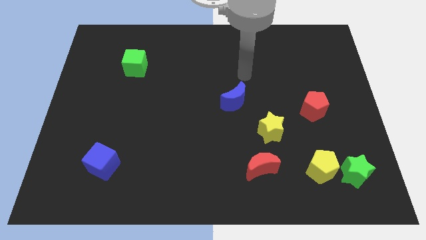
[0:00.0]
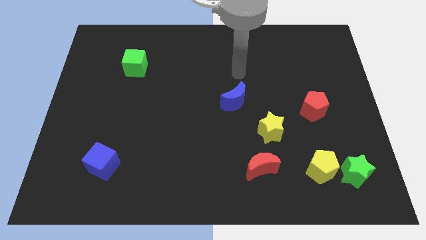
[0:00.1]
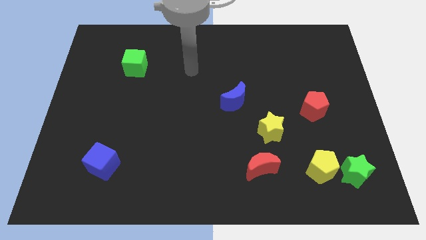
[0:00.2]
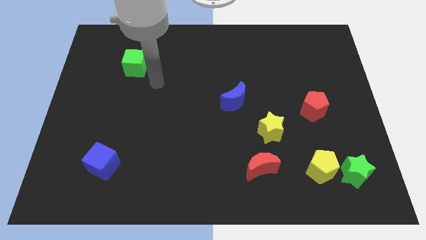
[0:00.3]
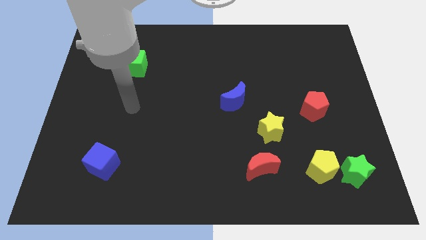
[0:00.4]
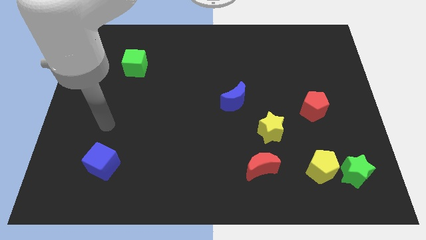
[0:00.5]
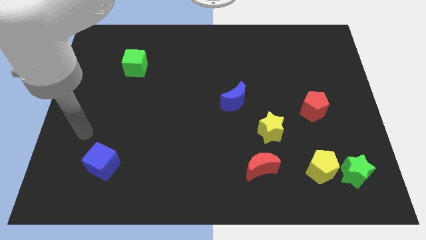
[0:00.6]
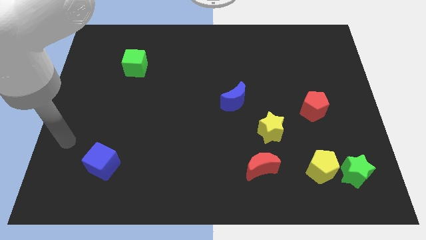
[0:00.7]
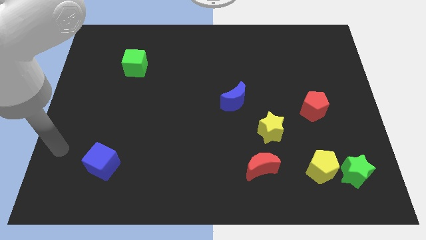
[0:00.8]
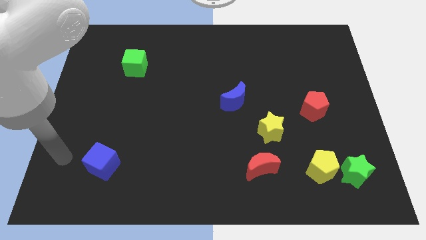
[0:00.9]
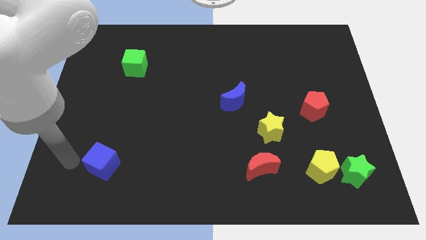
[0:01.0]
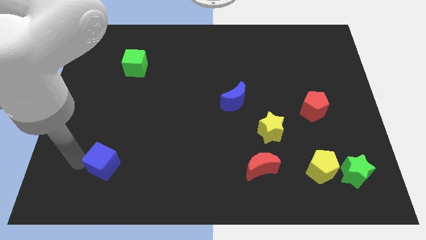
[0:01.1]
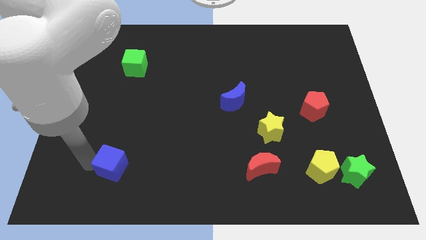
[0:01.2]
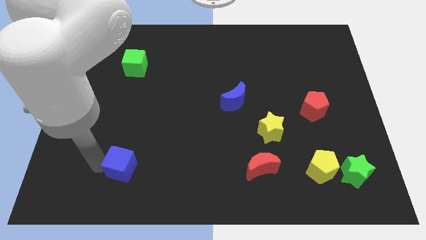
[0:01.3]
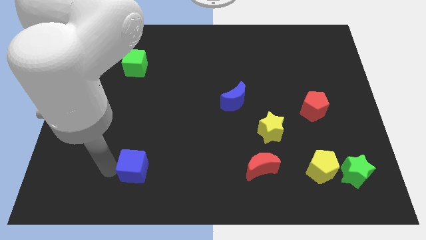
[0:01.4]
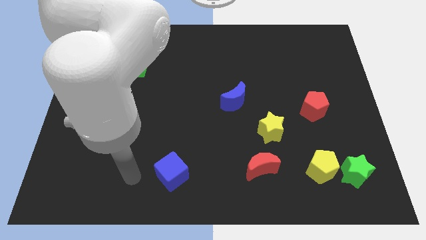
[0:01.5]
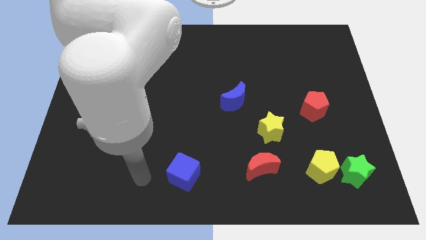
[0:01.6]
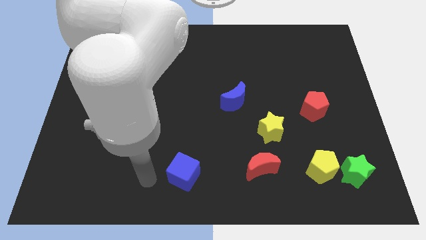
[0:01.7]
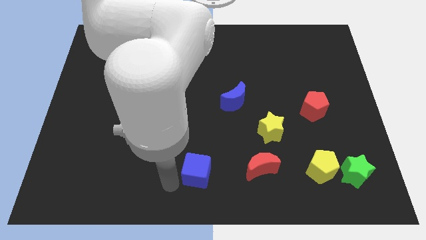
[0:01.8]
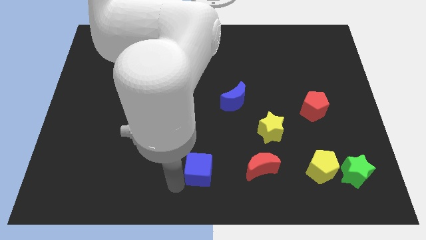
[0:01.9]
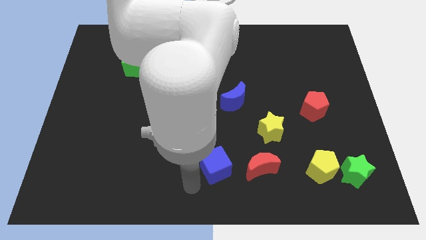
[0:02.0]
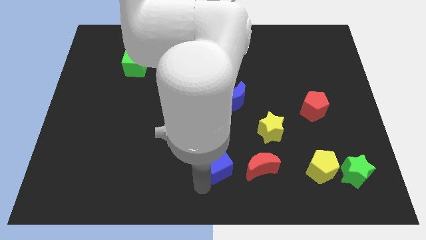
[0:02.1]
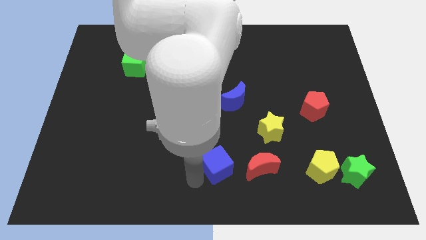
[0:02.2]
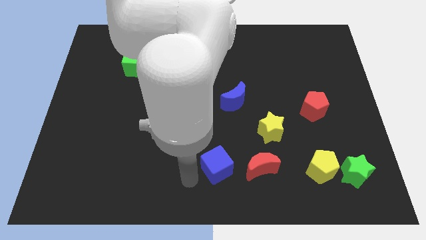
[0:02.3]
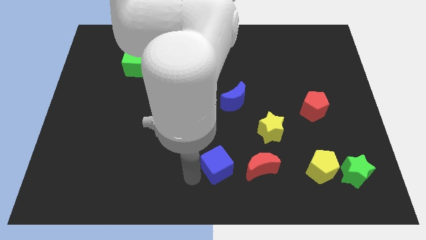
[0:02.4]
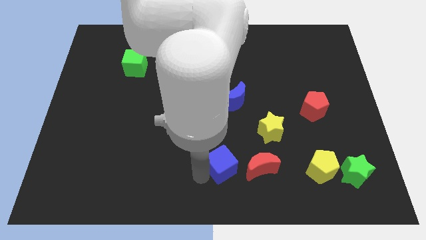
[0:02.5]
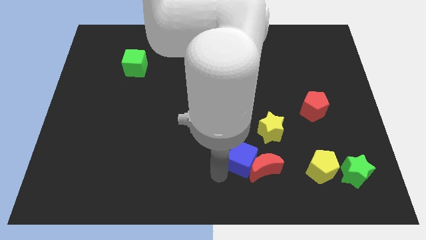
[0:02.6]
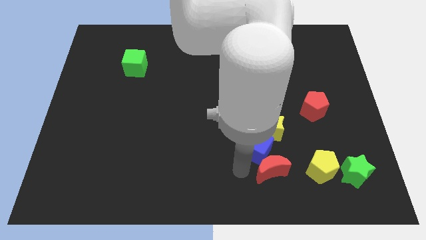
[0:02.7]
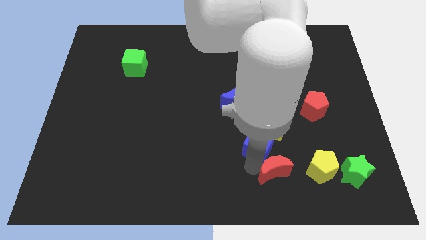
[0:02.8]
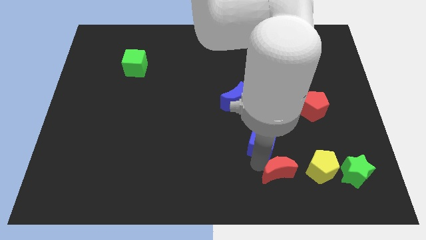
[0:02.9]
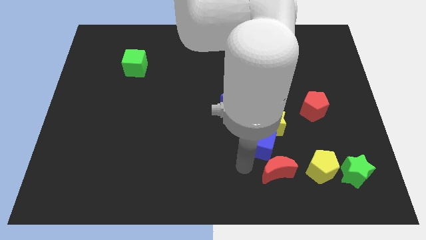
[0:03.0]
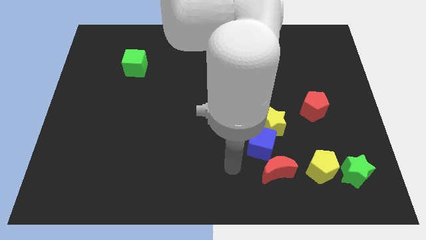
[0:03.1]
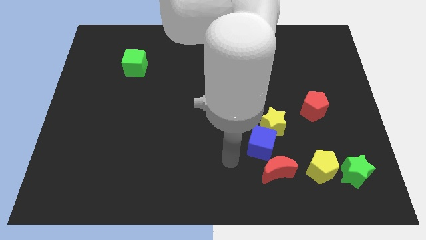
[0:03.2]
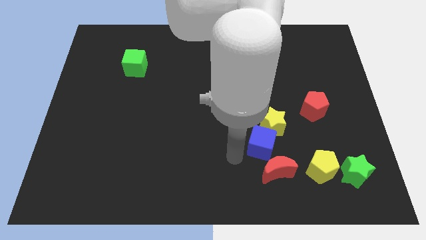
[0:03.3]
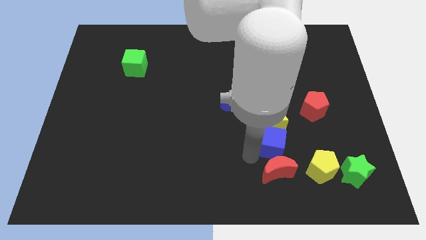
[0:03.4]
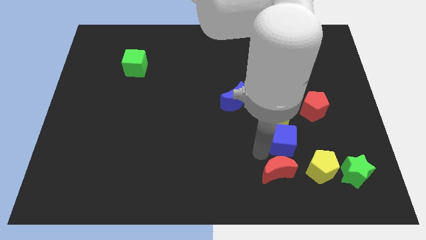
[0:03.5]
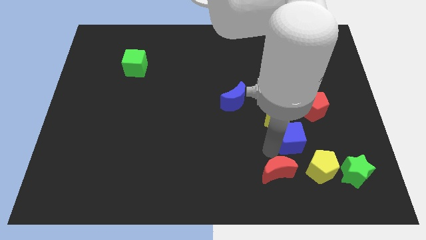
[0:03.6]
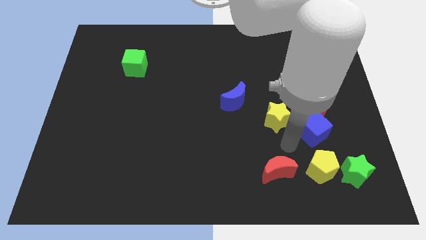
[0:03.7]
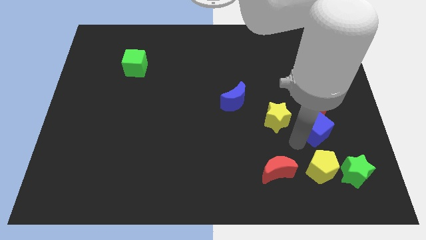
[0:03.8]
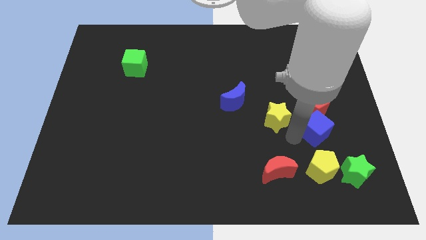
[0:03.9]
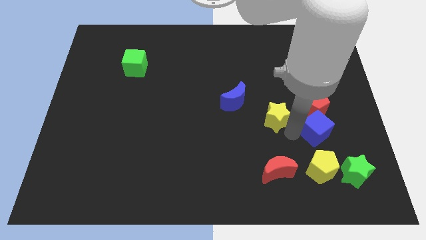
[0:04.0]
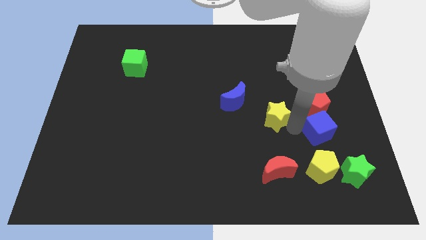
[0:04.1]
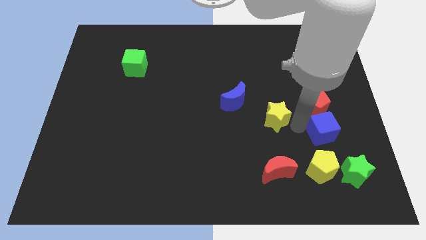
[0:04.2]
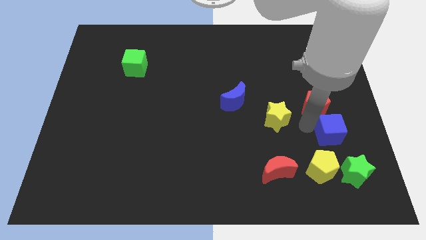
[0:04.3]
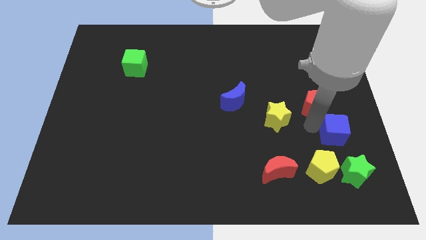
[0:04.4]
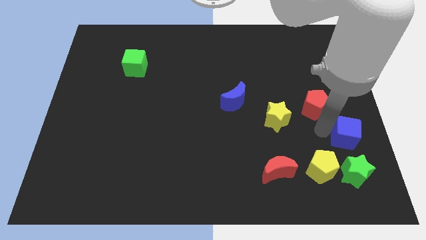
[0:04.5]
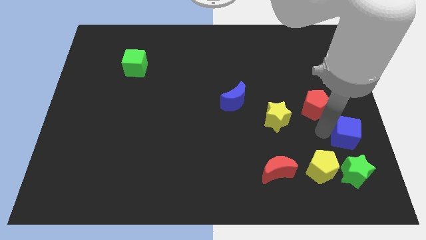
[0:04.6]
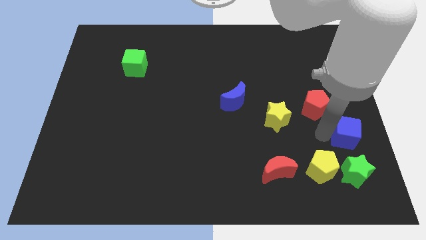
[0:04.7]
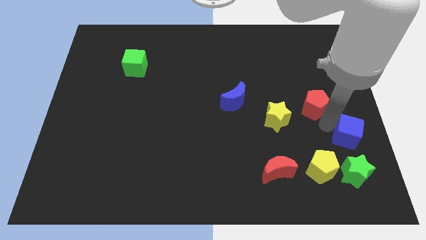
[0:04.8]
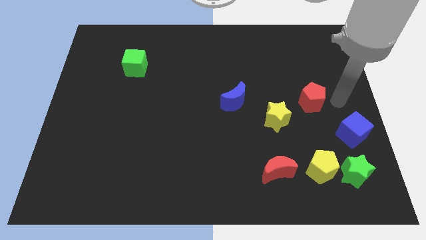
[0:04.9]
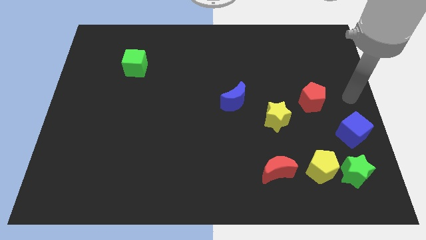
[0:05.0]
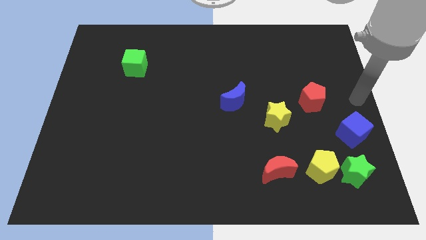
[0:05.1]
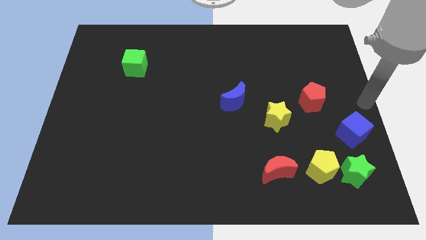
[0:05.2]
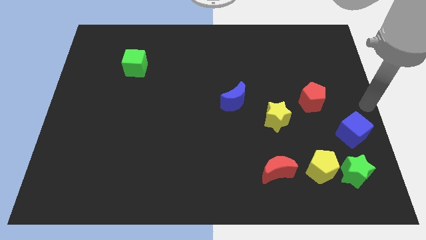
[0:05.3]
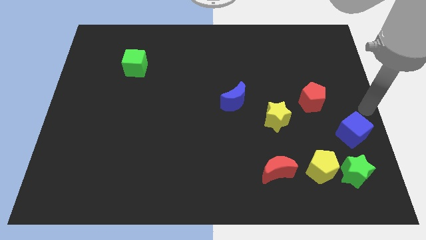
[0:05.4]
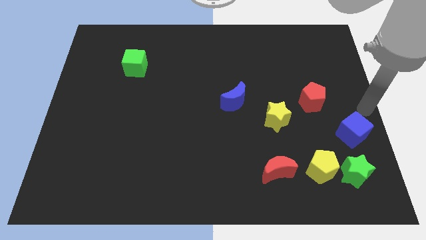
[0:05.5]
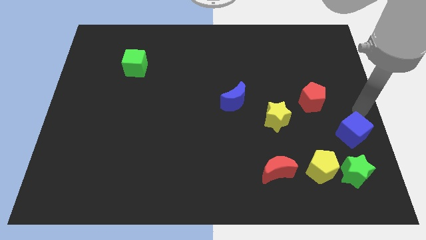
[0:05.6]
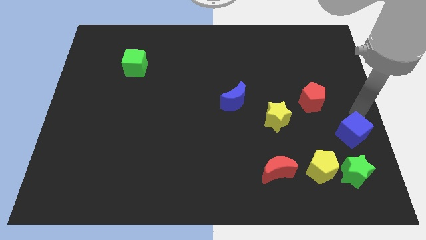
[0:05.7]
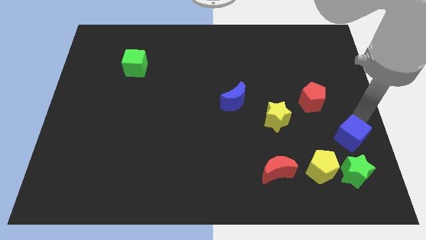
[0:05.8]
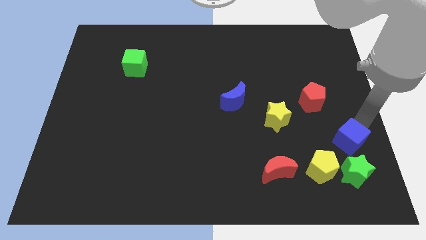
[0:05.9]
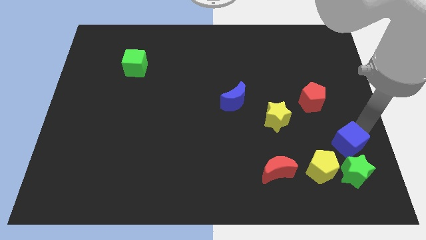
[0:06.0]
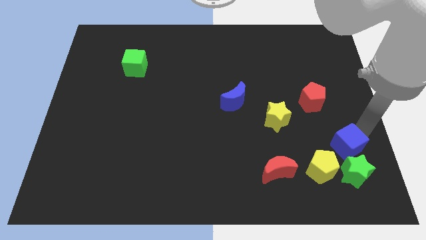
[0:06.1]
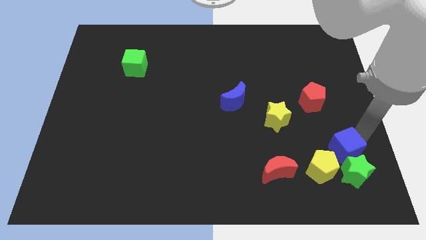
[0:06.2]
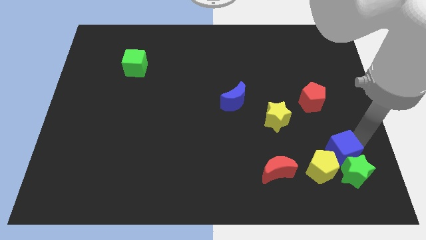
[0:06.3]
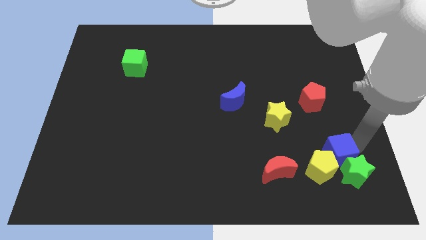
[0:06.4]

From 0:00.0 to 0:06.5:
slide the blue cube to the green star

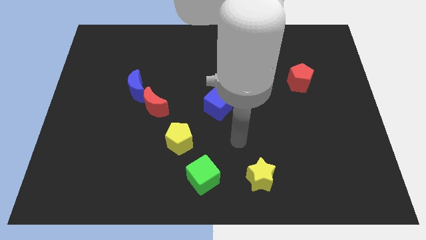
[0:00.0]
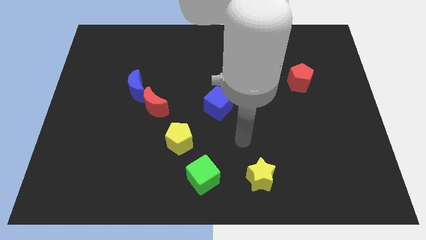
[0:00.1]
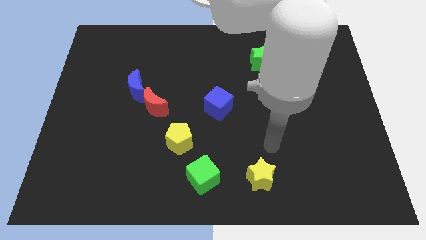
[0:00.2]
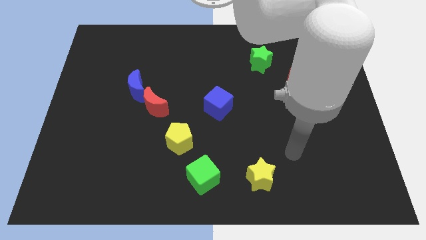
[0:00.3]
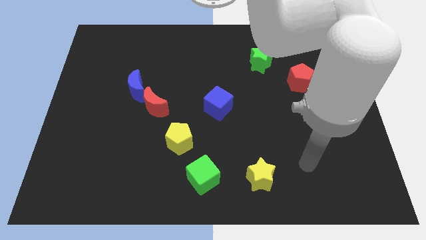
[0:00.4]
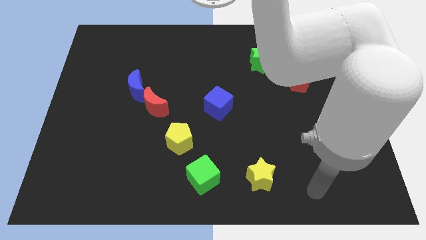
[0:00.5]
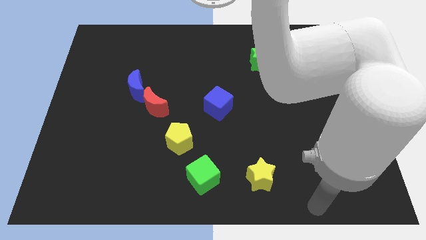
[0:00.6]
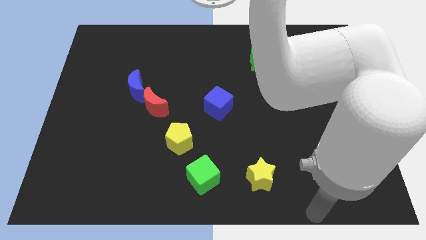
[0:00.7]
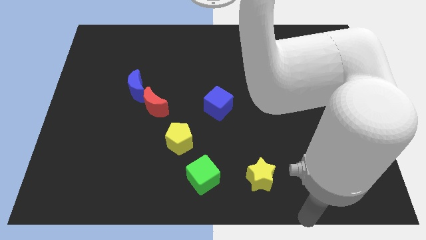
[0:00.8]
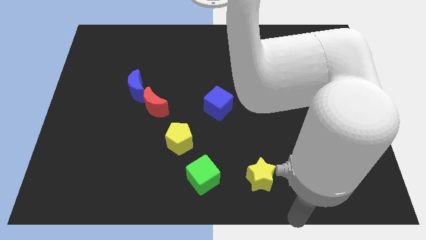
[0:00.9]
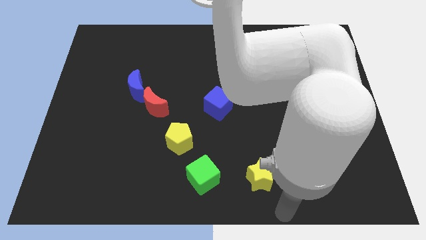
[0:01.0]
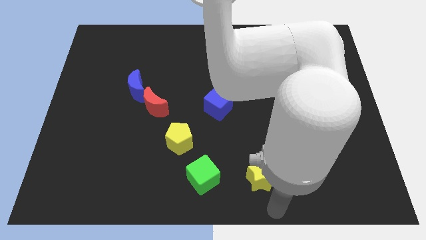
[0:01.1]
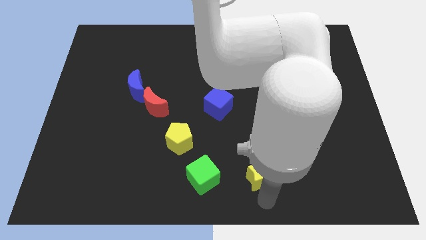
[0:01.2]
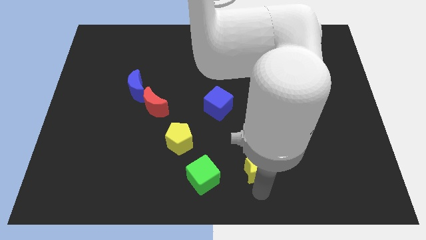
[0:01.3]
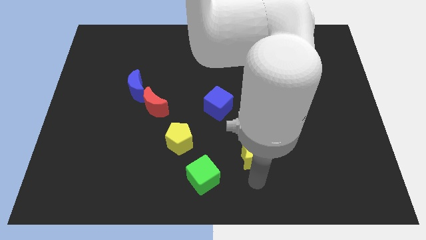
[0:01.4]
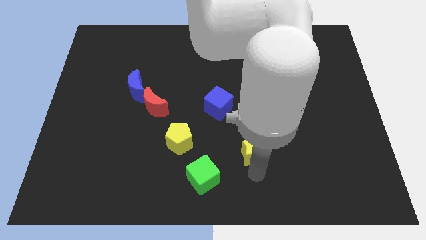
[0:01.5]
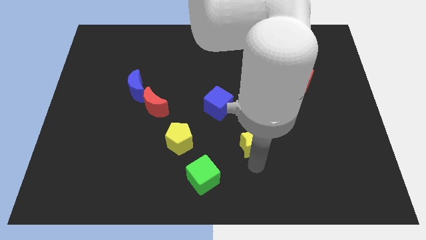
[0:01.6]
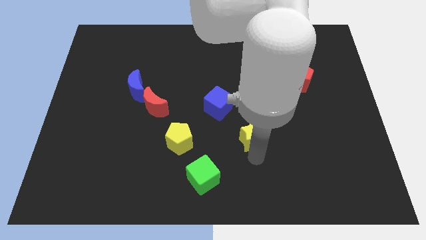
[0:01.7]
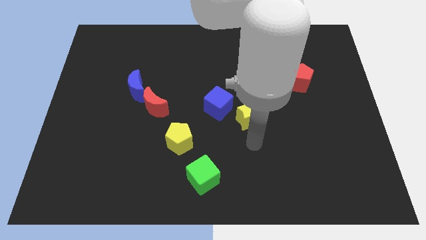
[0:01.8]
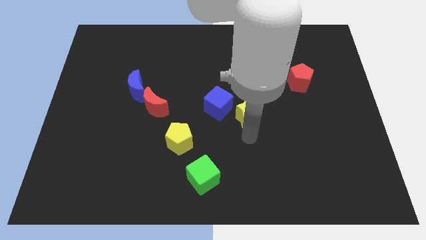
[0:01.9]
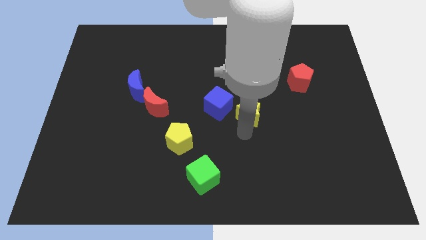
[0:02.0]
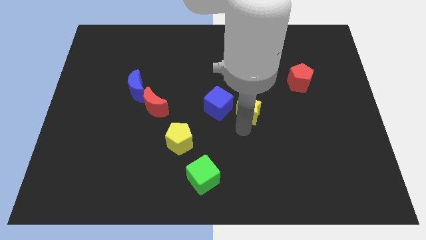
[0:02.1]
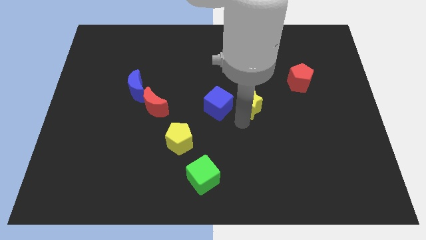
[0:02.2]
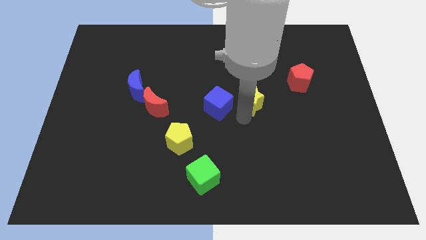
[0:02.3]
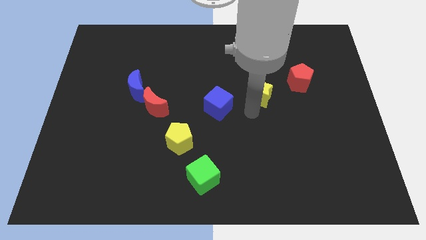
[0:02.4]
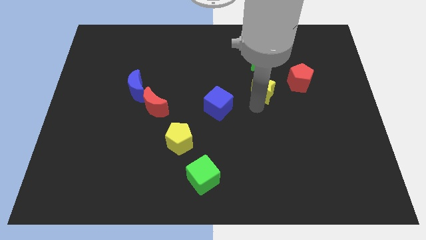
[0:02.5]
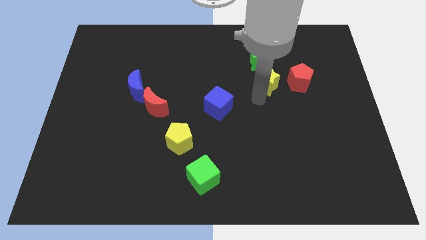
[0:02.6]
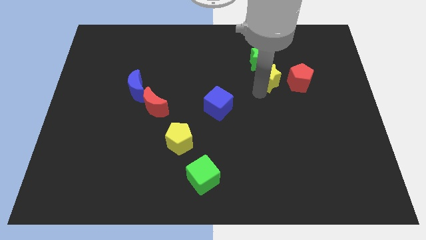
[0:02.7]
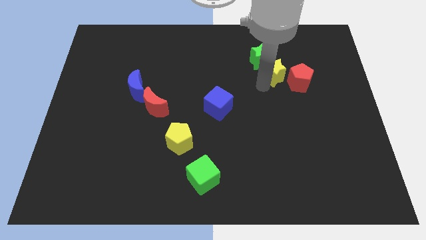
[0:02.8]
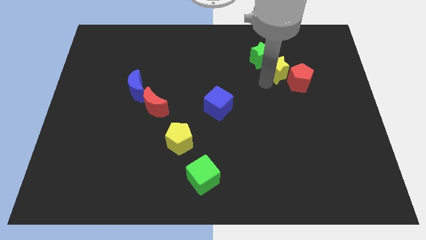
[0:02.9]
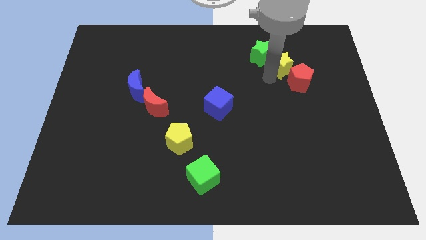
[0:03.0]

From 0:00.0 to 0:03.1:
slide the yellow star to the green star
